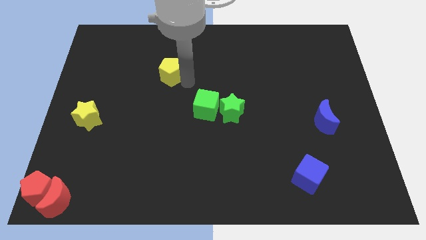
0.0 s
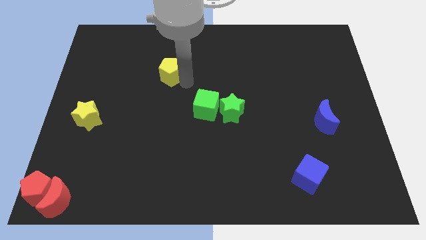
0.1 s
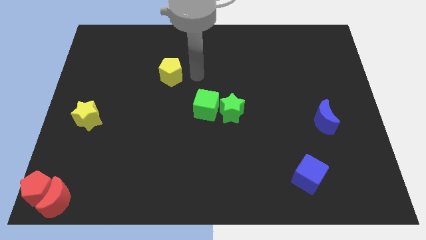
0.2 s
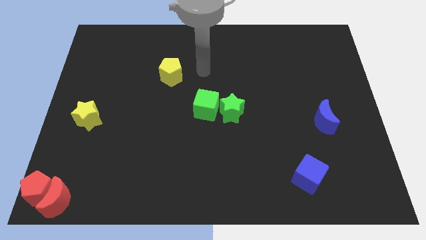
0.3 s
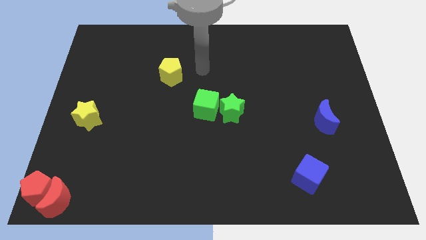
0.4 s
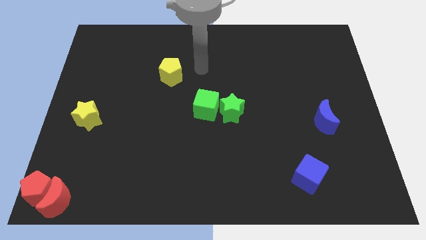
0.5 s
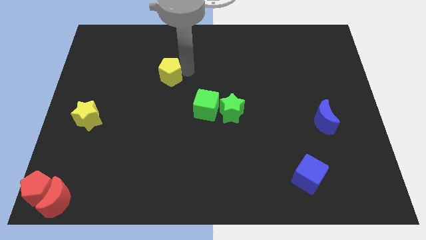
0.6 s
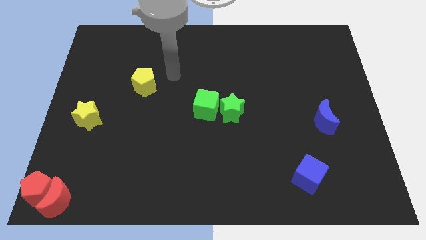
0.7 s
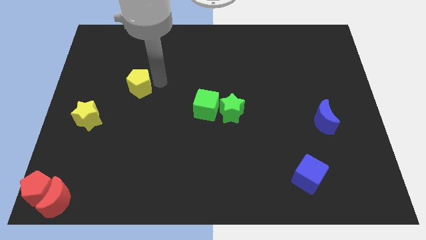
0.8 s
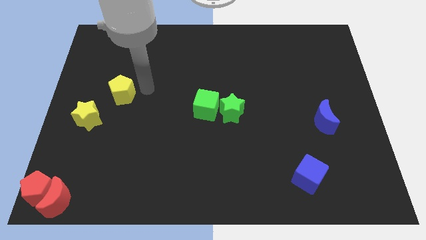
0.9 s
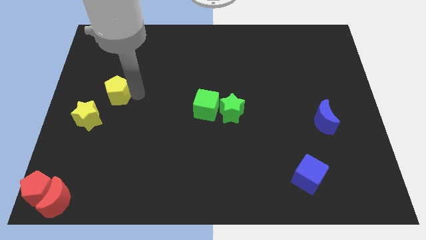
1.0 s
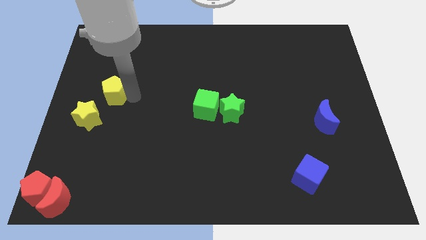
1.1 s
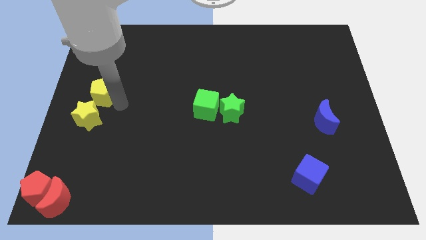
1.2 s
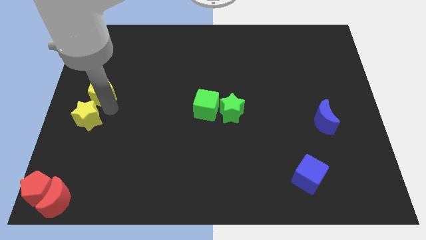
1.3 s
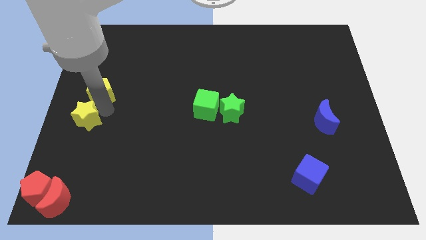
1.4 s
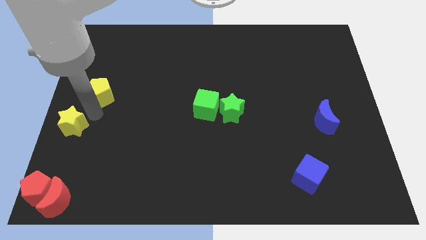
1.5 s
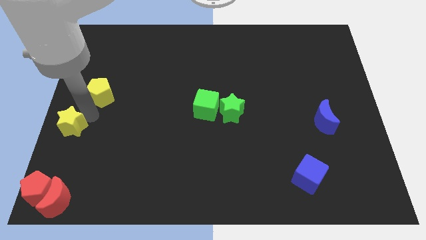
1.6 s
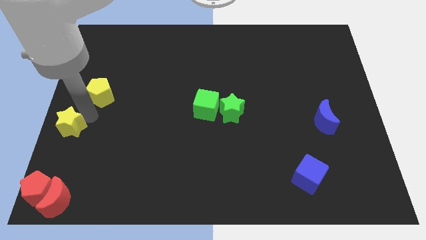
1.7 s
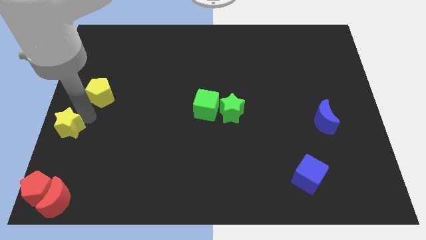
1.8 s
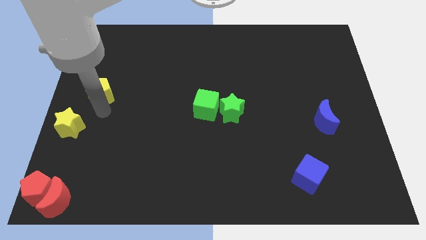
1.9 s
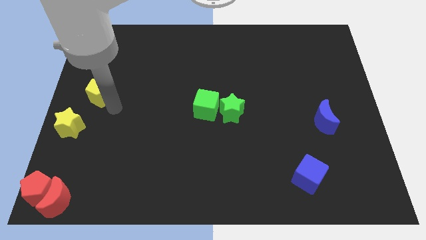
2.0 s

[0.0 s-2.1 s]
move yellow pentagon towards yellow star

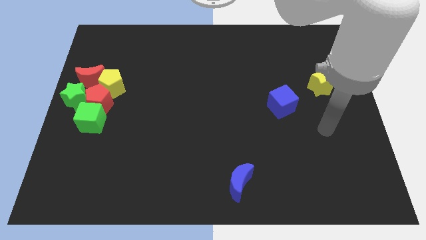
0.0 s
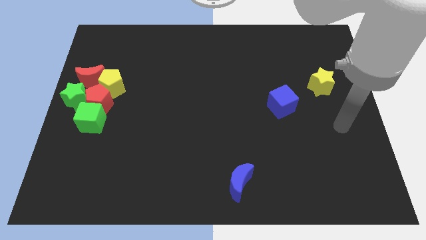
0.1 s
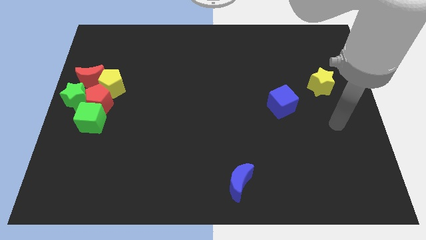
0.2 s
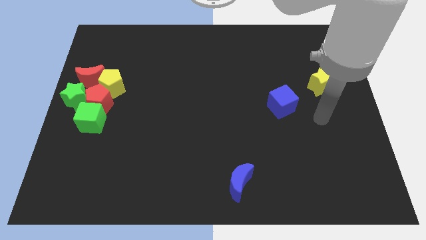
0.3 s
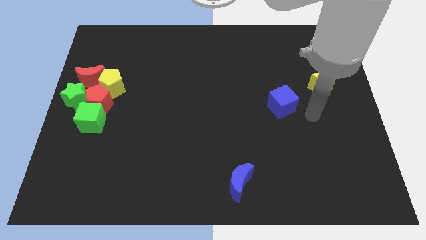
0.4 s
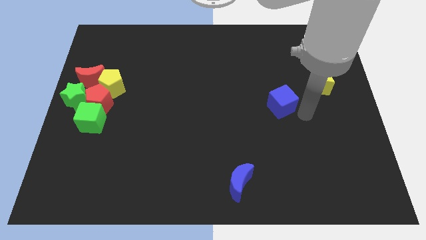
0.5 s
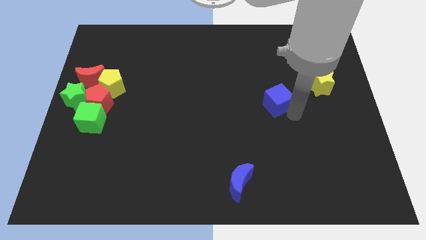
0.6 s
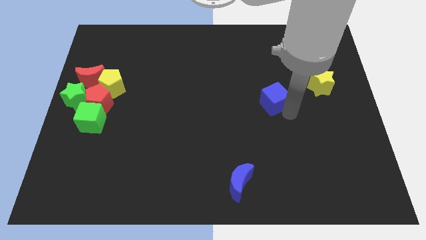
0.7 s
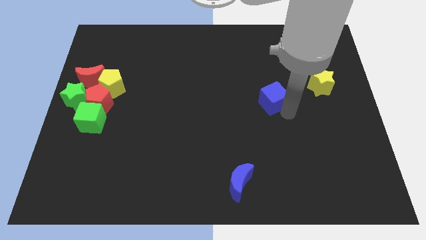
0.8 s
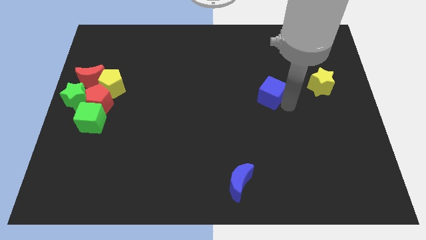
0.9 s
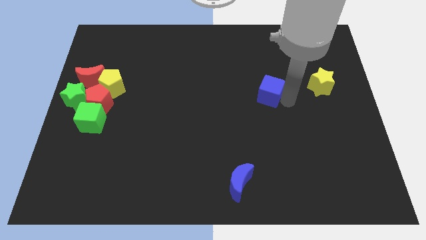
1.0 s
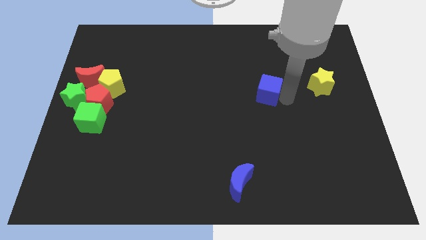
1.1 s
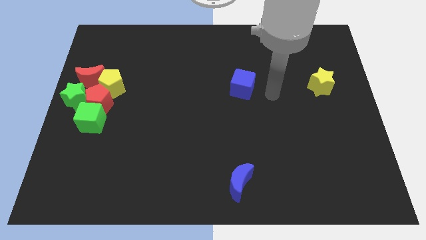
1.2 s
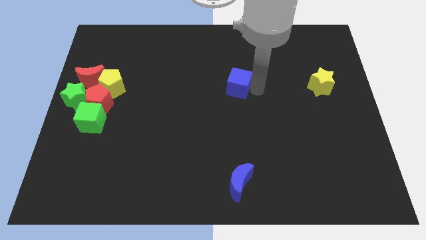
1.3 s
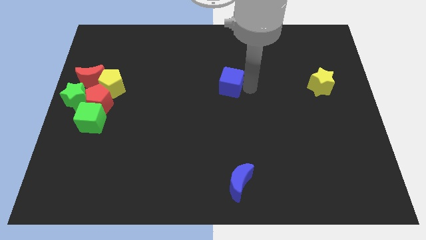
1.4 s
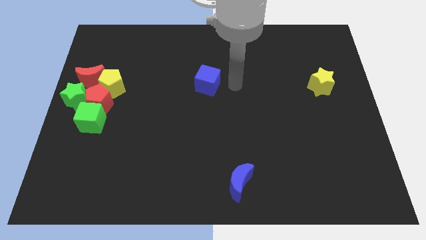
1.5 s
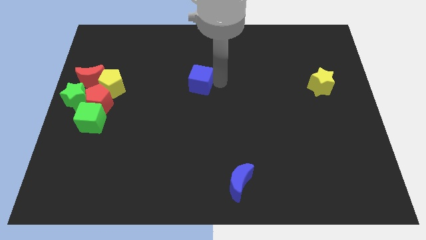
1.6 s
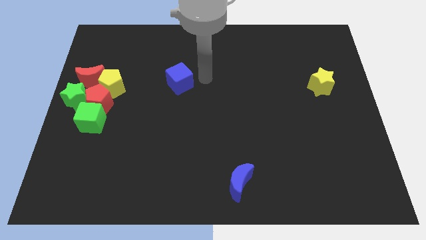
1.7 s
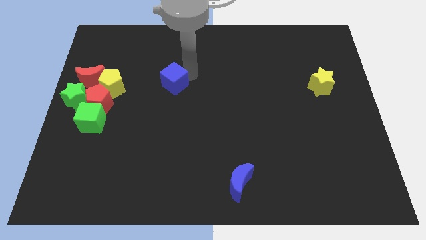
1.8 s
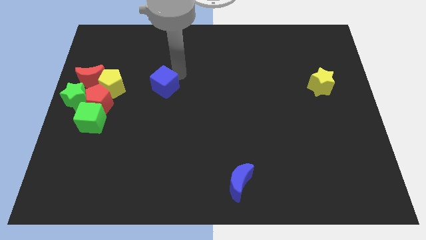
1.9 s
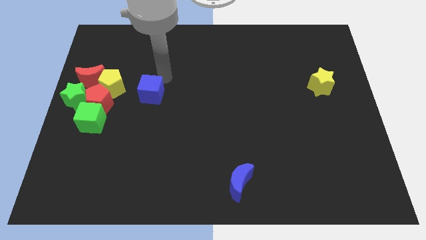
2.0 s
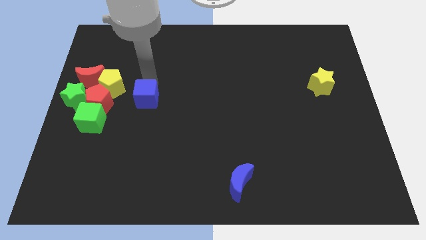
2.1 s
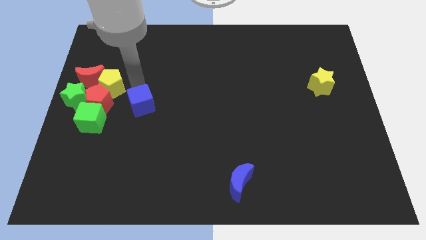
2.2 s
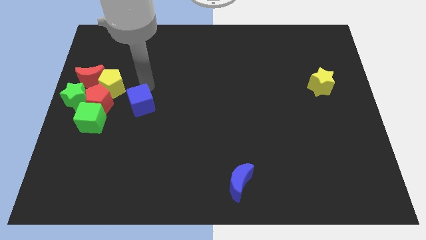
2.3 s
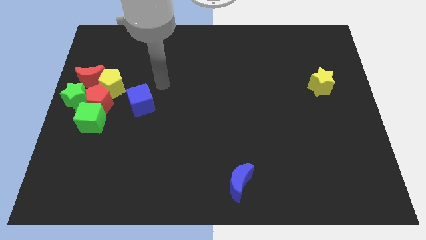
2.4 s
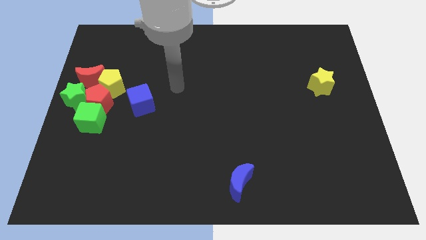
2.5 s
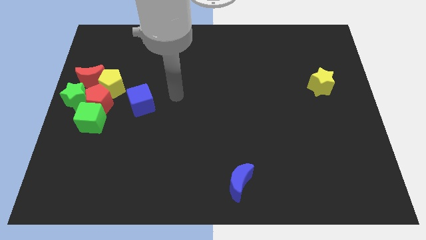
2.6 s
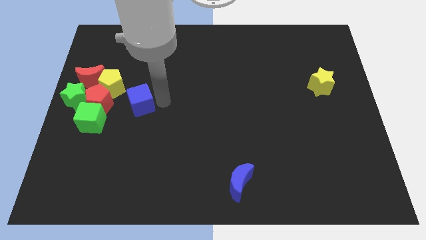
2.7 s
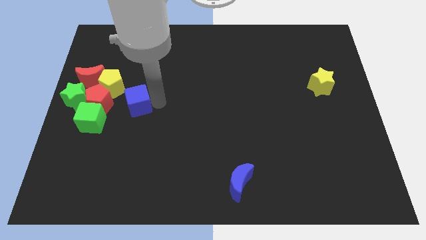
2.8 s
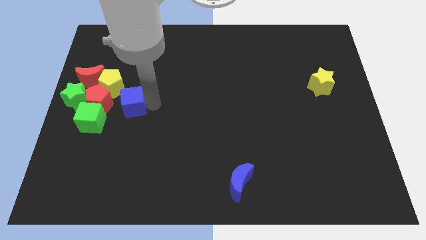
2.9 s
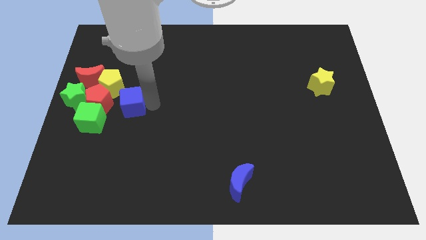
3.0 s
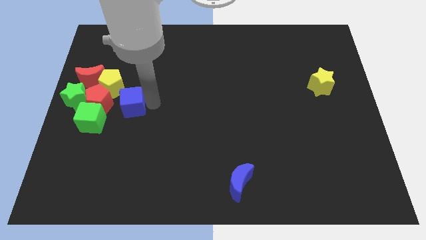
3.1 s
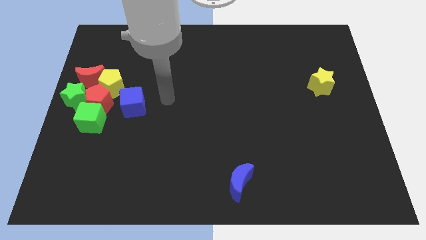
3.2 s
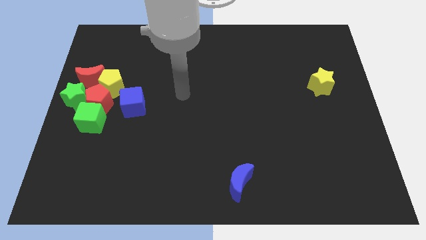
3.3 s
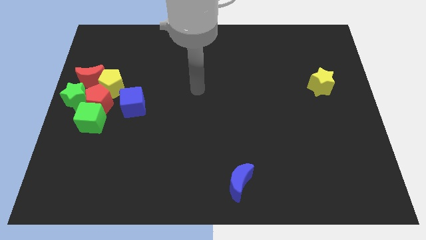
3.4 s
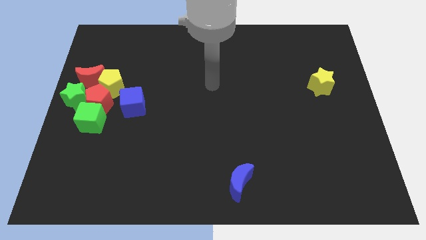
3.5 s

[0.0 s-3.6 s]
move the blue cube to the right side of the red pentagon

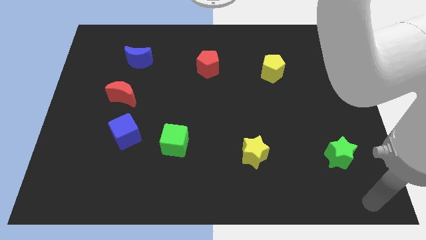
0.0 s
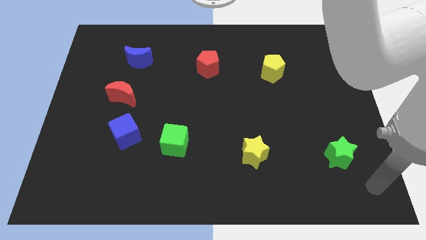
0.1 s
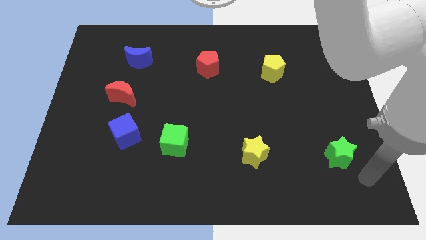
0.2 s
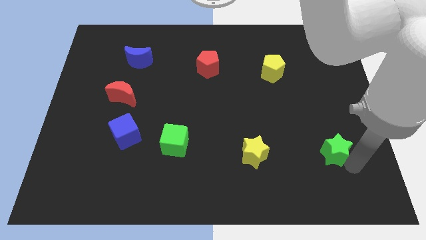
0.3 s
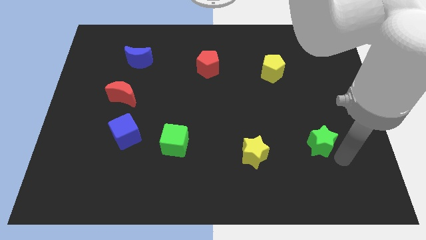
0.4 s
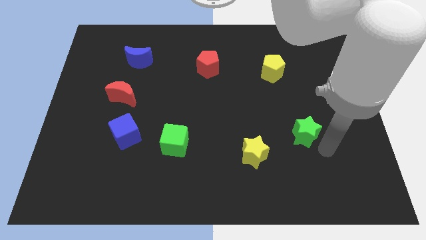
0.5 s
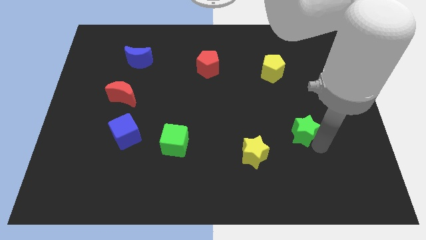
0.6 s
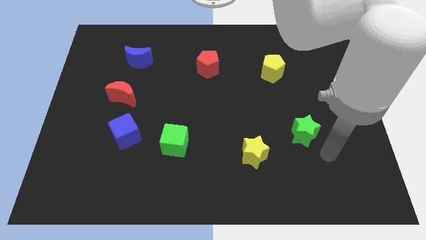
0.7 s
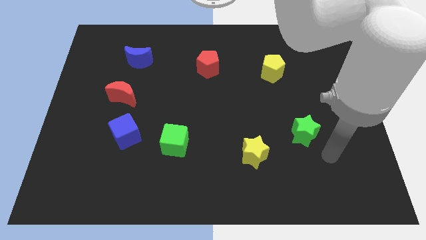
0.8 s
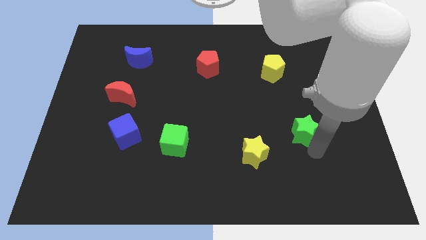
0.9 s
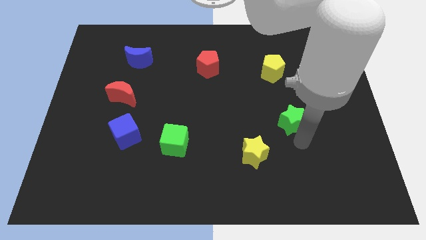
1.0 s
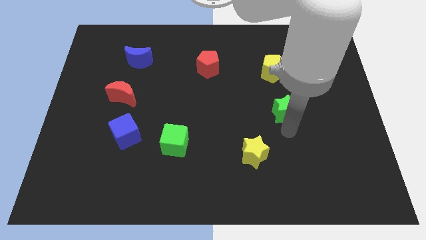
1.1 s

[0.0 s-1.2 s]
push green star towards yellow pentagon

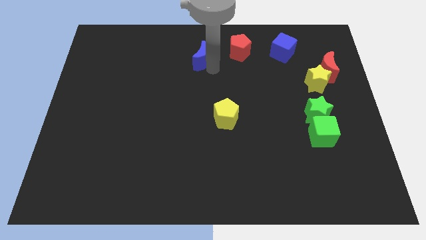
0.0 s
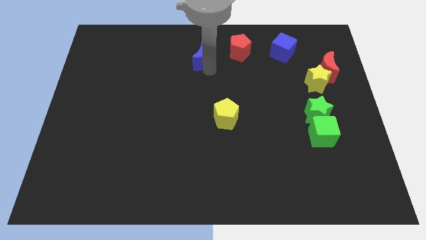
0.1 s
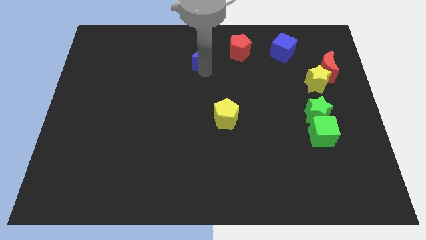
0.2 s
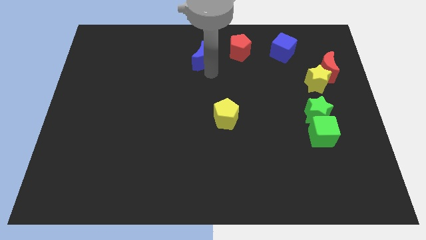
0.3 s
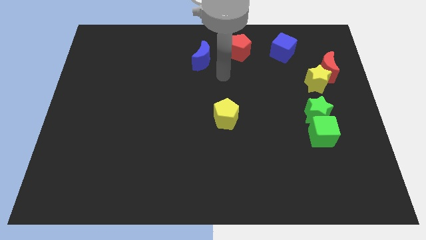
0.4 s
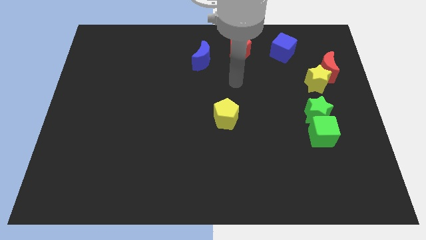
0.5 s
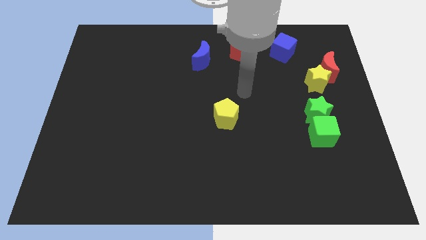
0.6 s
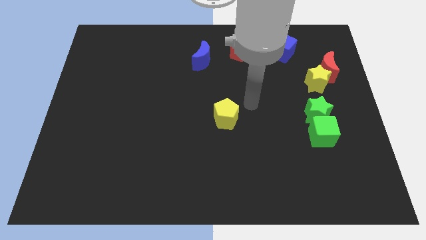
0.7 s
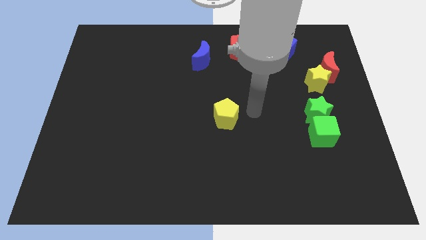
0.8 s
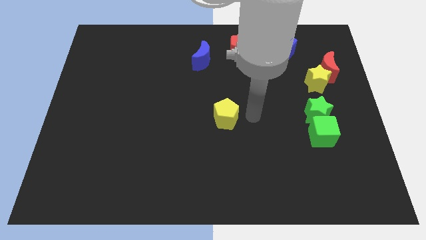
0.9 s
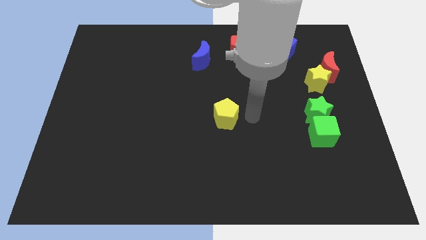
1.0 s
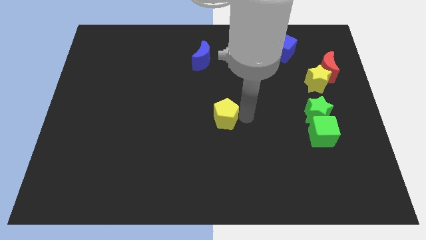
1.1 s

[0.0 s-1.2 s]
move your arm at the top right side of the yellow pentagon

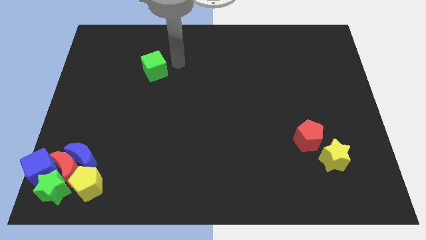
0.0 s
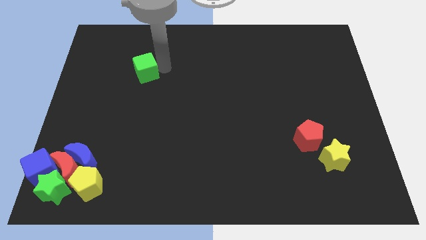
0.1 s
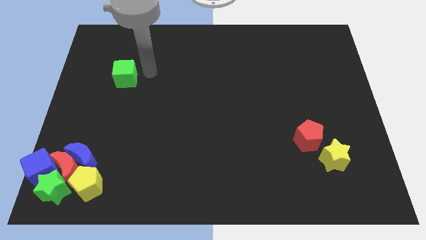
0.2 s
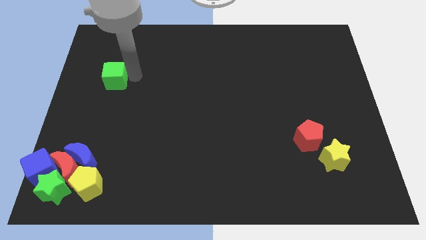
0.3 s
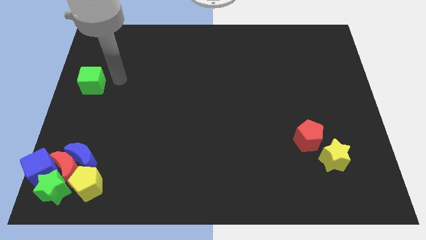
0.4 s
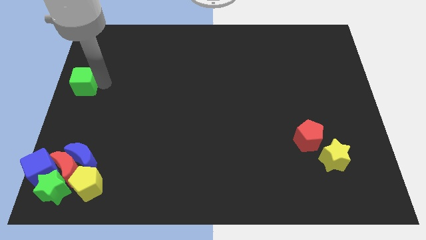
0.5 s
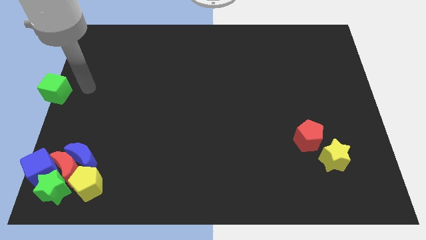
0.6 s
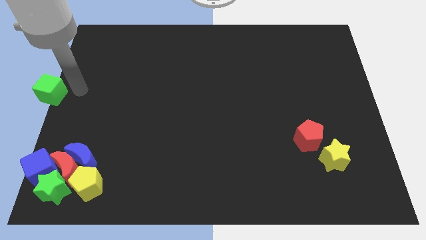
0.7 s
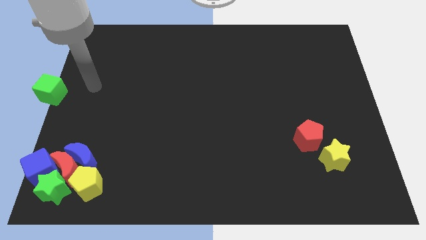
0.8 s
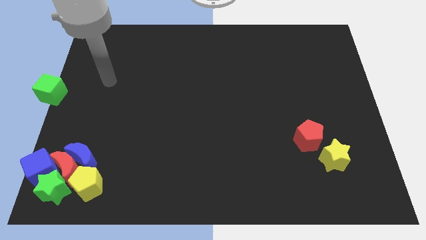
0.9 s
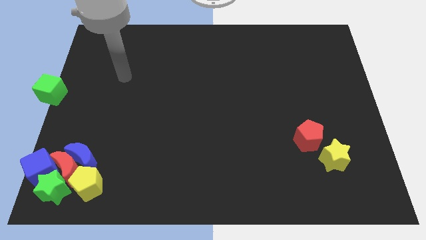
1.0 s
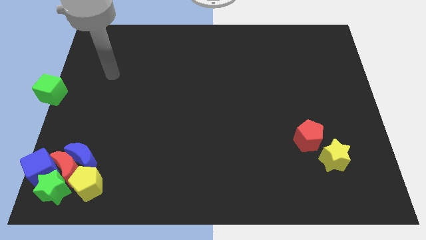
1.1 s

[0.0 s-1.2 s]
place the green cube at the center left
